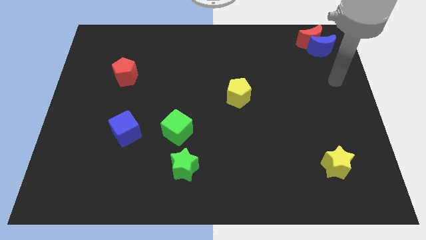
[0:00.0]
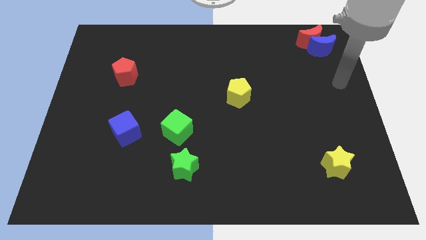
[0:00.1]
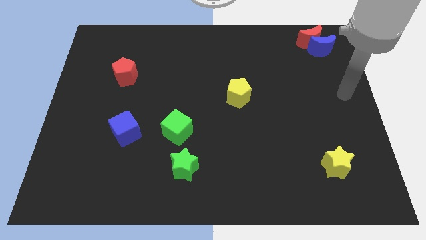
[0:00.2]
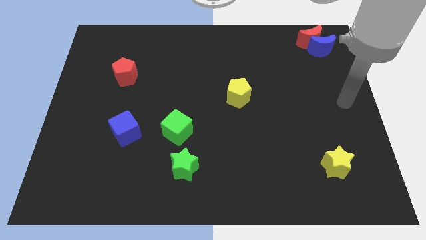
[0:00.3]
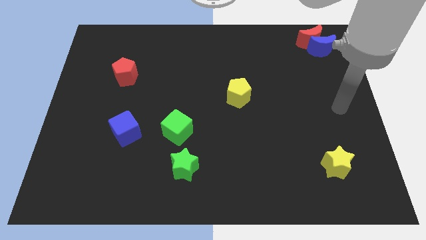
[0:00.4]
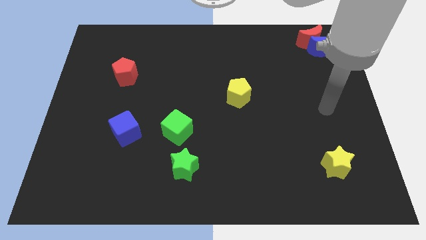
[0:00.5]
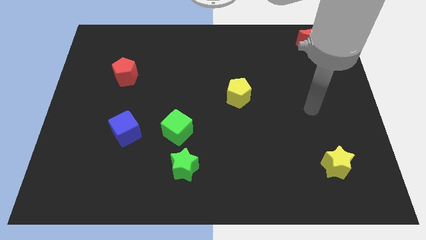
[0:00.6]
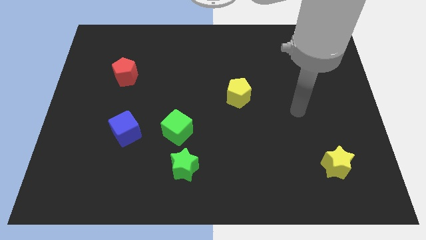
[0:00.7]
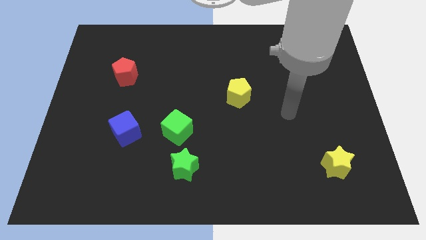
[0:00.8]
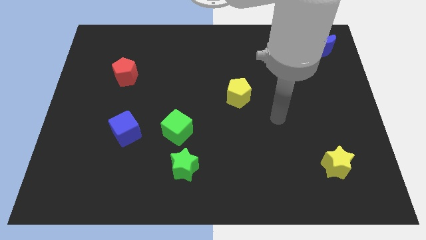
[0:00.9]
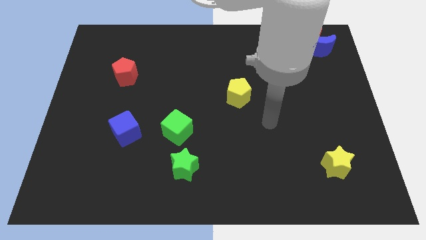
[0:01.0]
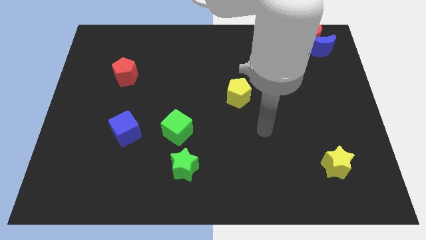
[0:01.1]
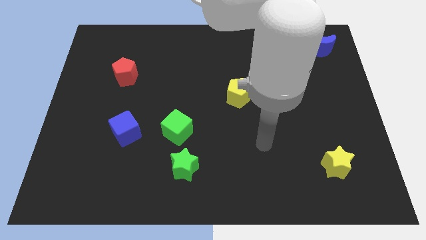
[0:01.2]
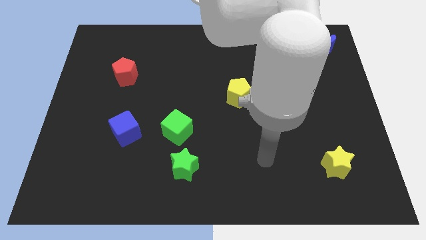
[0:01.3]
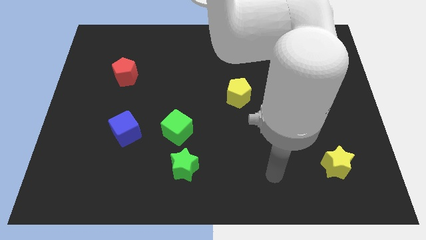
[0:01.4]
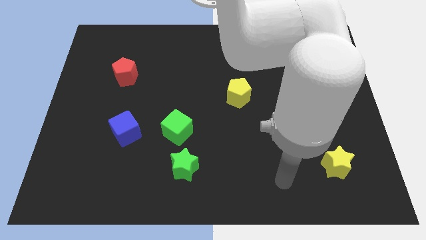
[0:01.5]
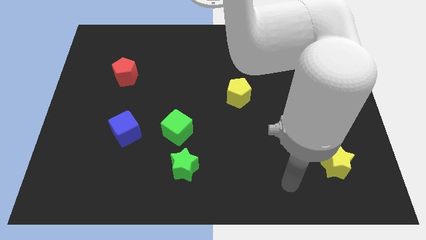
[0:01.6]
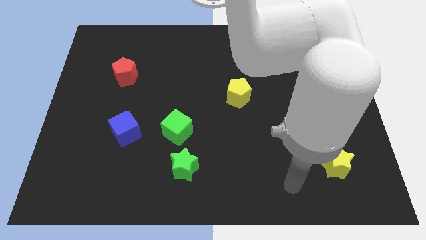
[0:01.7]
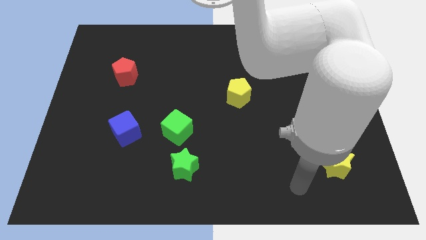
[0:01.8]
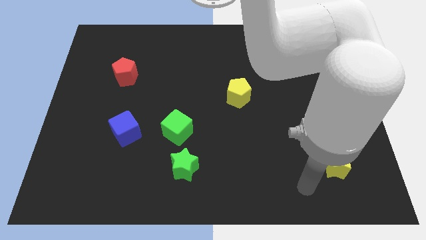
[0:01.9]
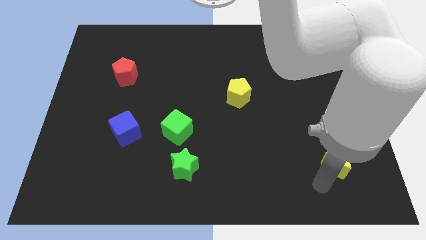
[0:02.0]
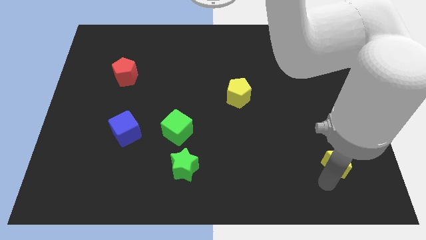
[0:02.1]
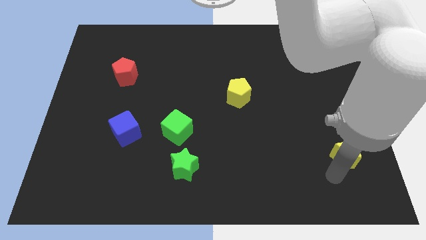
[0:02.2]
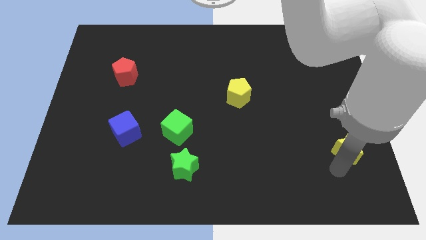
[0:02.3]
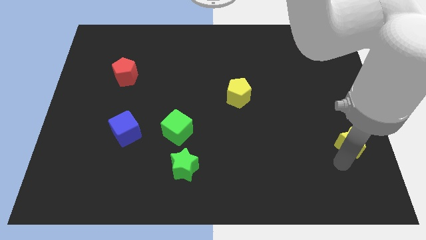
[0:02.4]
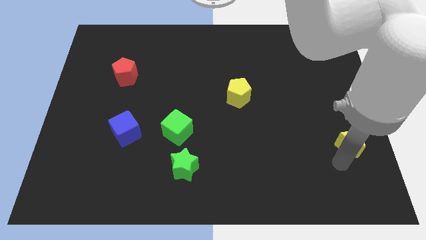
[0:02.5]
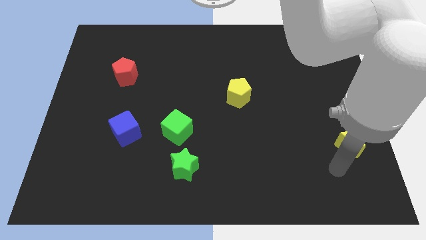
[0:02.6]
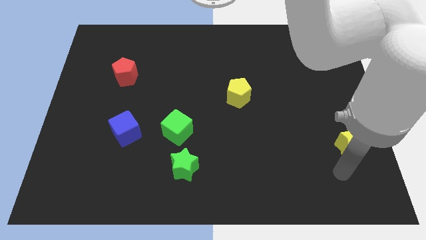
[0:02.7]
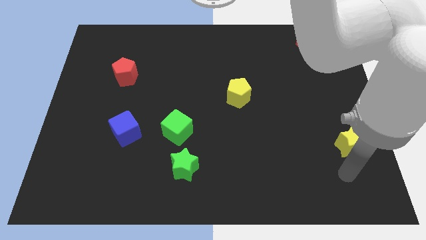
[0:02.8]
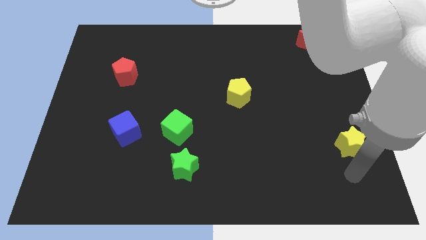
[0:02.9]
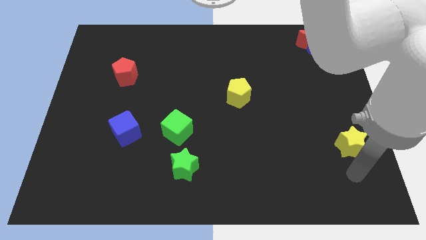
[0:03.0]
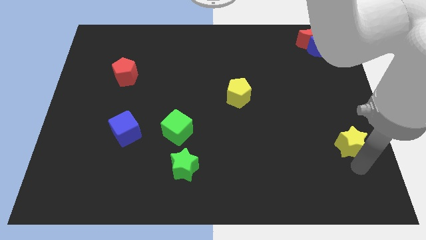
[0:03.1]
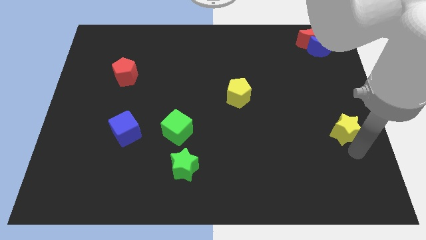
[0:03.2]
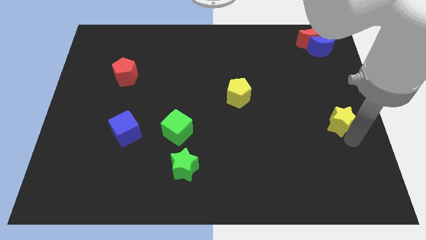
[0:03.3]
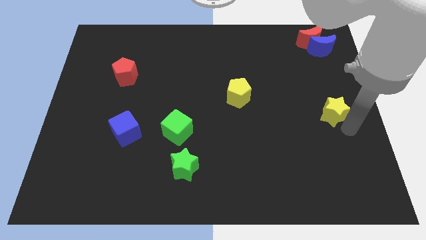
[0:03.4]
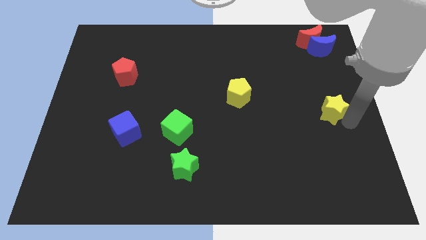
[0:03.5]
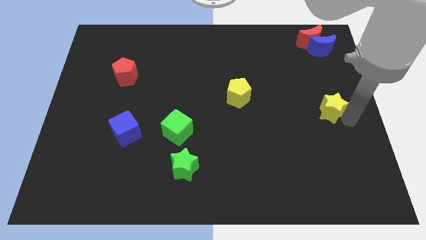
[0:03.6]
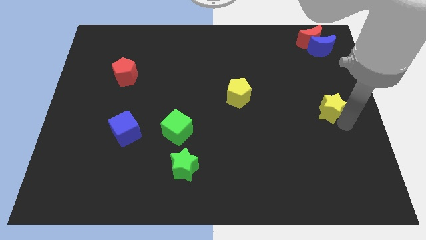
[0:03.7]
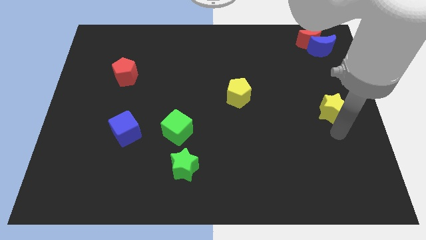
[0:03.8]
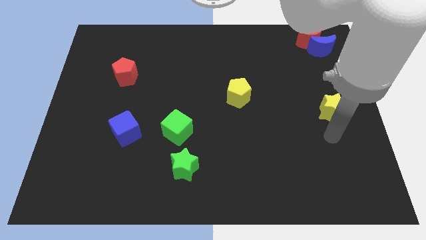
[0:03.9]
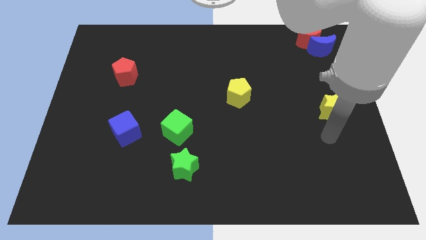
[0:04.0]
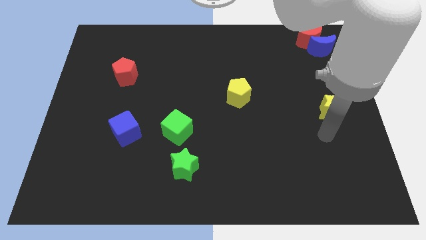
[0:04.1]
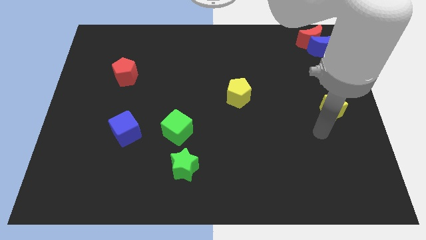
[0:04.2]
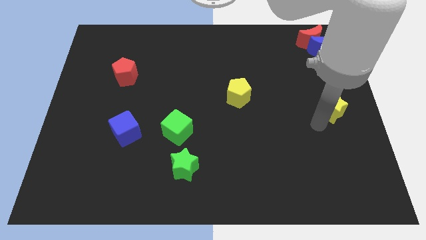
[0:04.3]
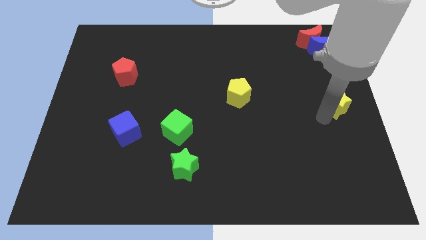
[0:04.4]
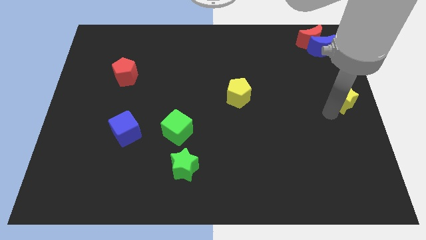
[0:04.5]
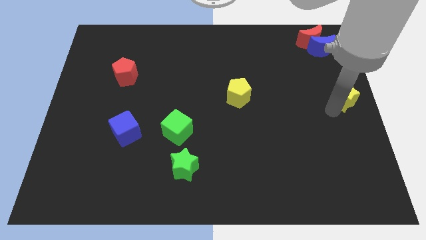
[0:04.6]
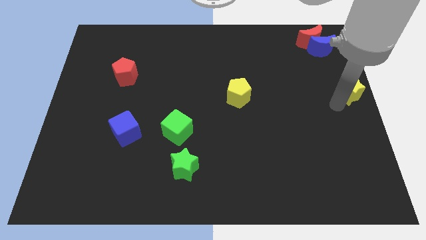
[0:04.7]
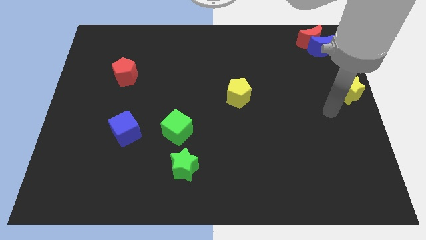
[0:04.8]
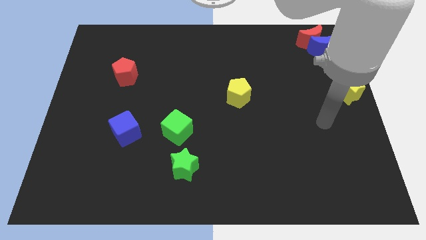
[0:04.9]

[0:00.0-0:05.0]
push the yellow star to the right center of the board

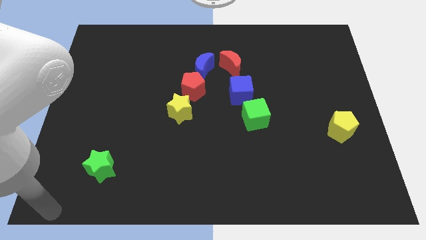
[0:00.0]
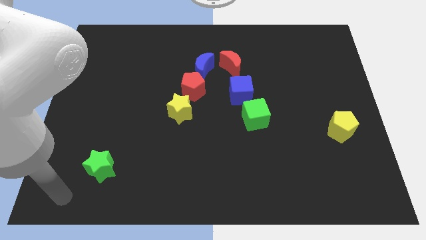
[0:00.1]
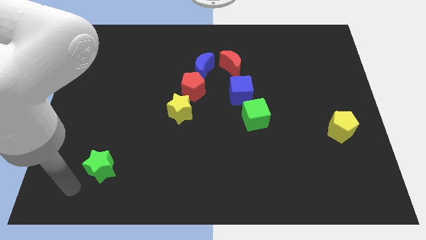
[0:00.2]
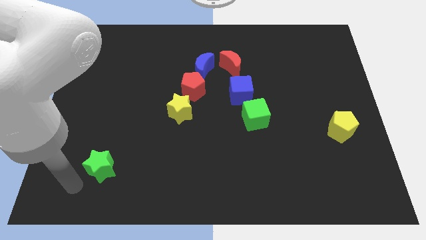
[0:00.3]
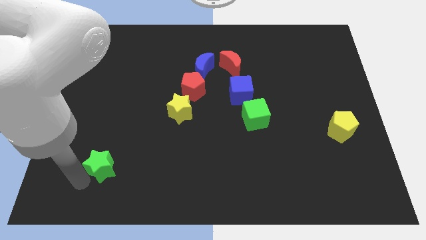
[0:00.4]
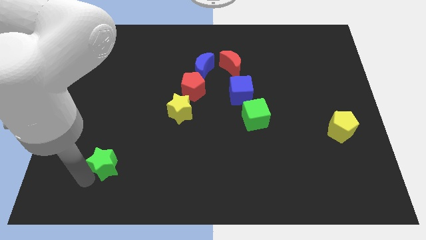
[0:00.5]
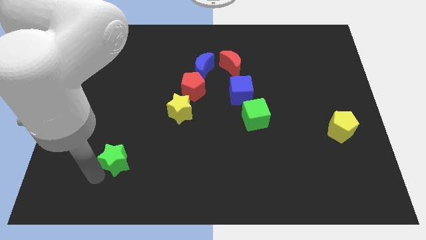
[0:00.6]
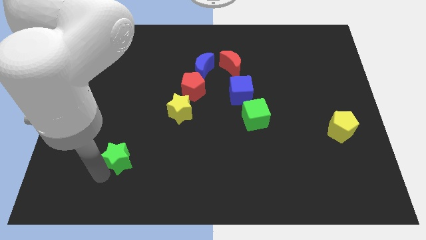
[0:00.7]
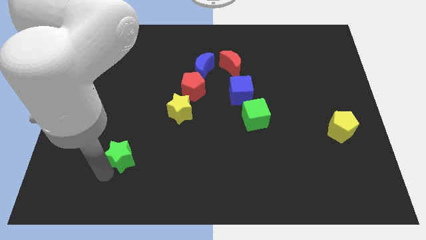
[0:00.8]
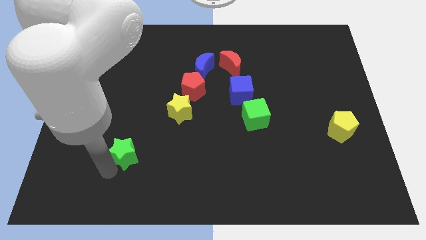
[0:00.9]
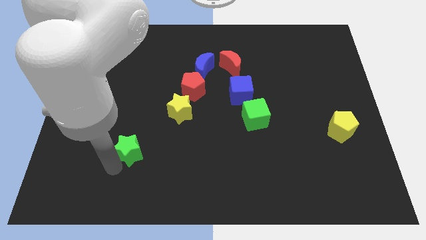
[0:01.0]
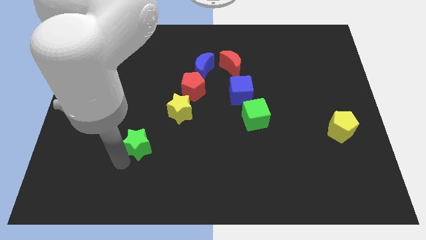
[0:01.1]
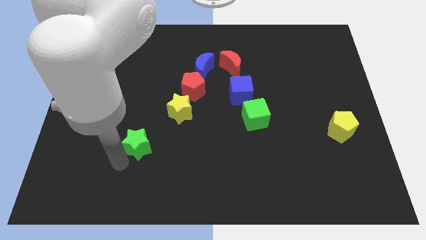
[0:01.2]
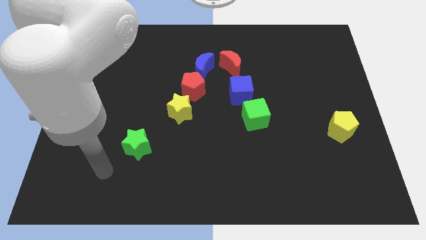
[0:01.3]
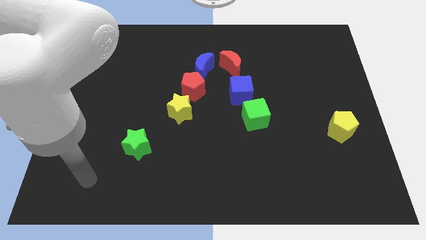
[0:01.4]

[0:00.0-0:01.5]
move the green star towards the yellow star

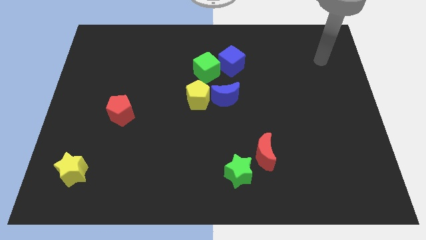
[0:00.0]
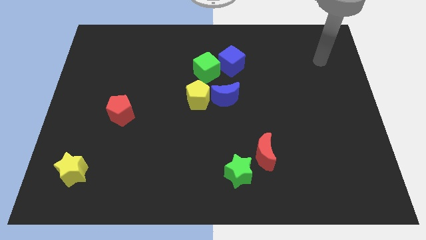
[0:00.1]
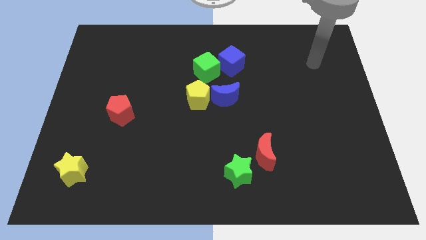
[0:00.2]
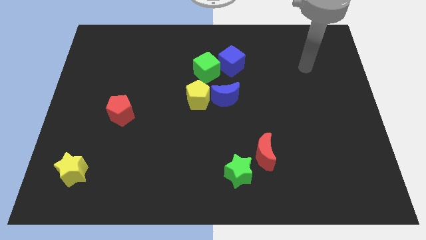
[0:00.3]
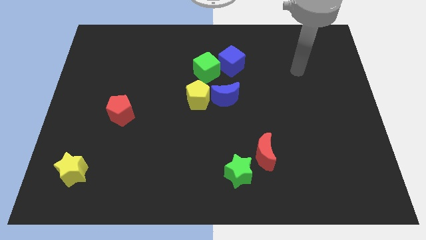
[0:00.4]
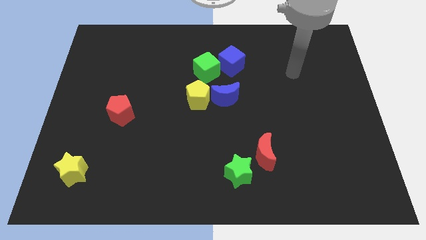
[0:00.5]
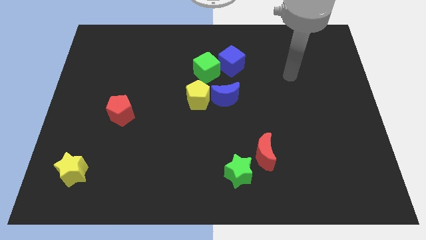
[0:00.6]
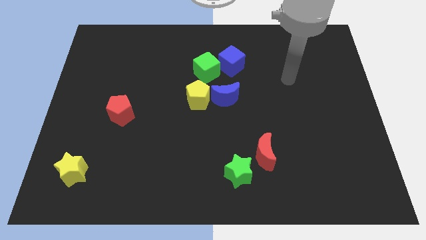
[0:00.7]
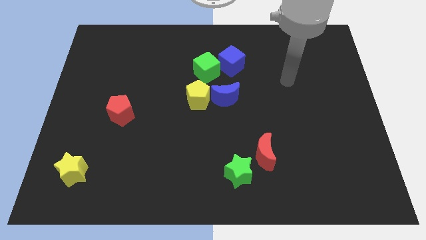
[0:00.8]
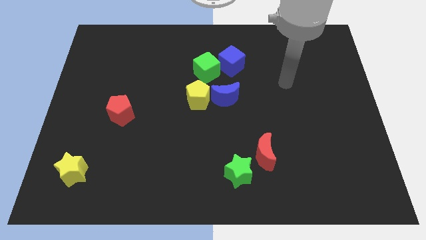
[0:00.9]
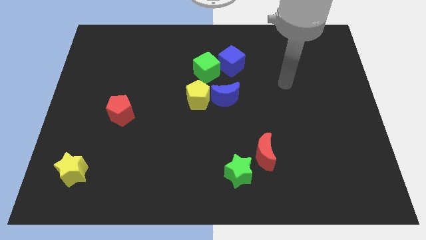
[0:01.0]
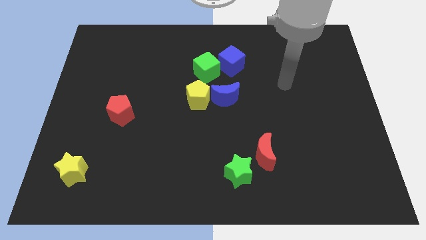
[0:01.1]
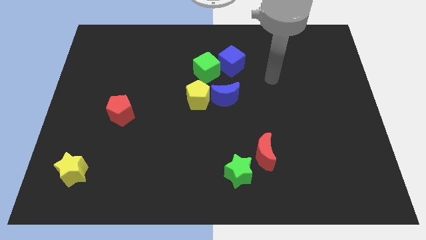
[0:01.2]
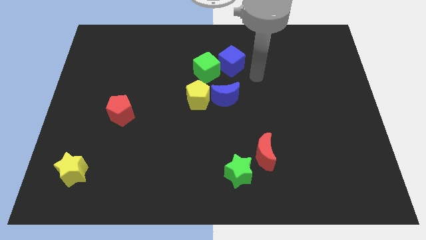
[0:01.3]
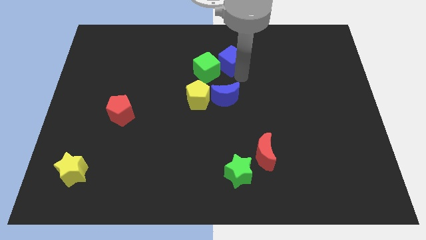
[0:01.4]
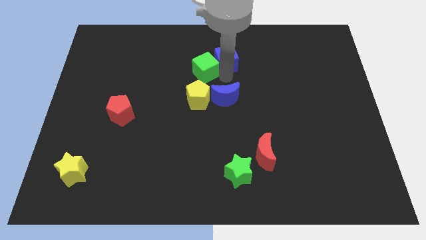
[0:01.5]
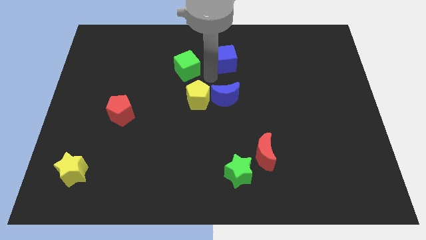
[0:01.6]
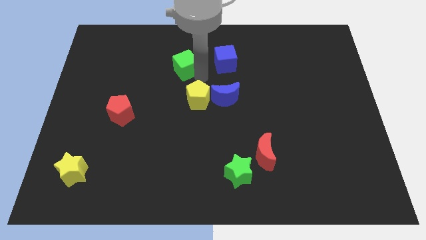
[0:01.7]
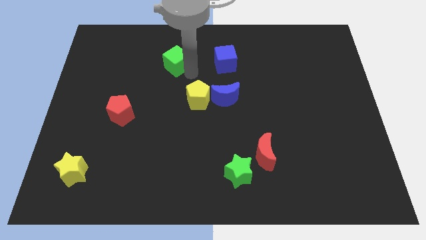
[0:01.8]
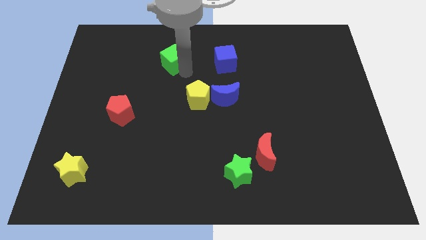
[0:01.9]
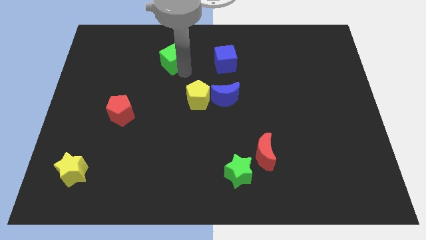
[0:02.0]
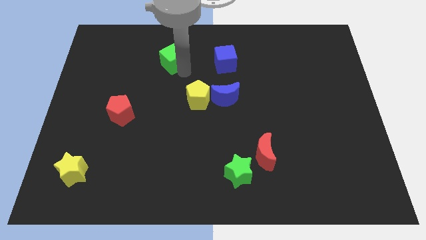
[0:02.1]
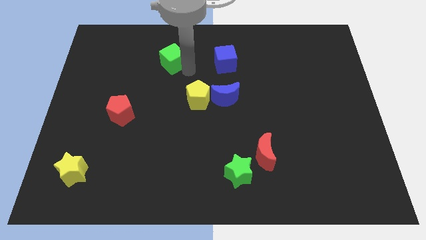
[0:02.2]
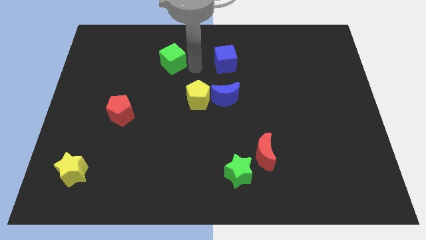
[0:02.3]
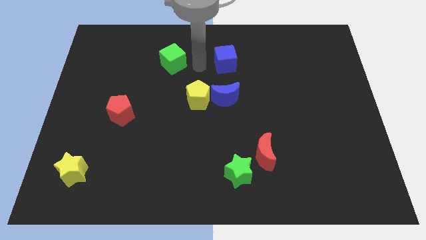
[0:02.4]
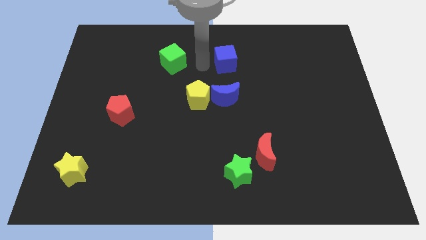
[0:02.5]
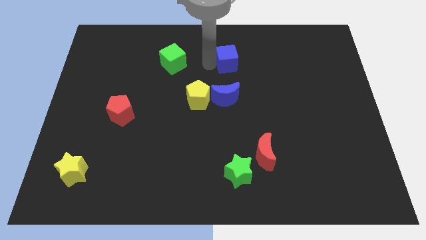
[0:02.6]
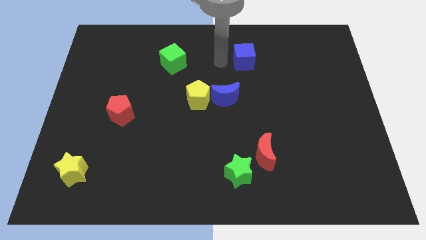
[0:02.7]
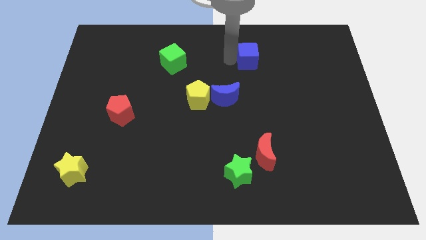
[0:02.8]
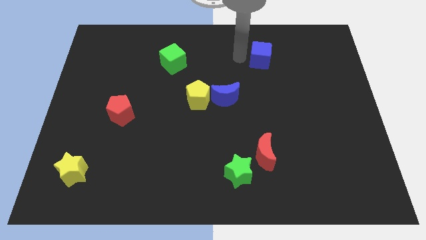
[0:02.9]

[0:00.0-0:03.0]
separate the green and blue cubes to left and right direction
